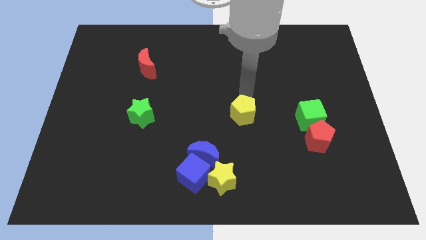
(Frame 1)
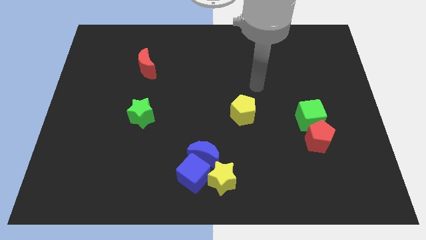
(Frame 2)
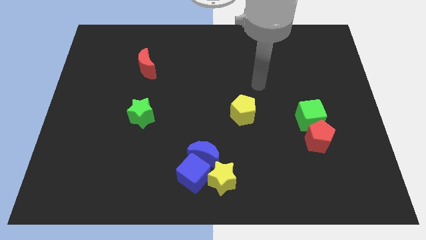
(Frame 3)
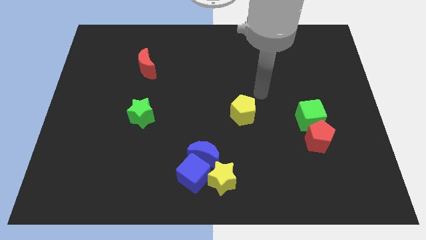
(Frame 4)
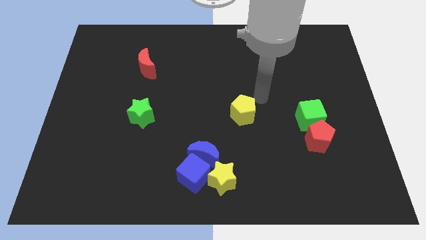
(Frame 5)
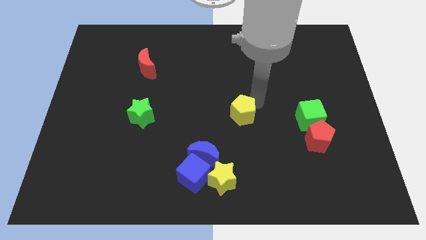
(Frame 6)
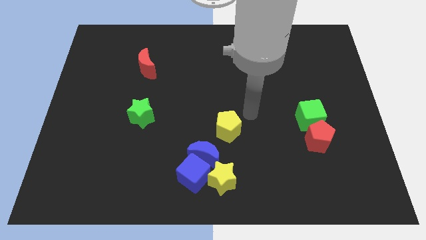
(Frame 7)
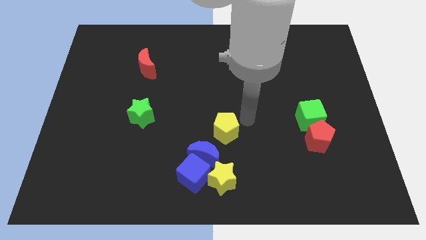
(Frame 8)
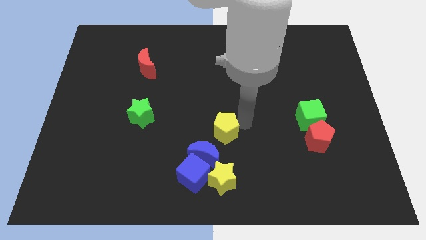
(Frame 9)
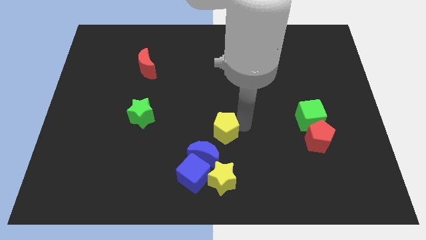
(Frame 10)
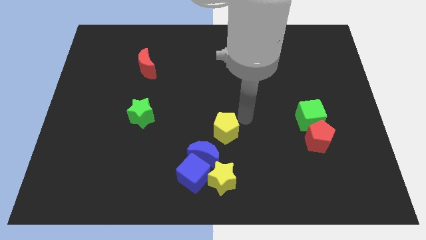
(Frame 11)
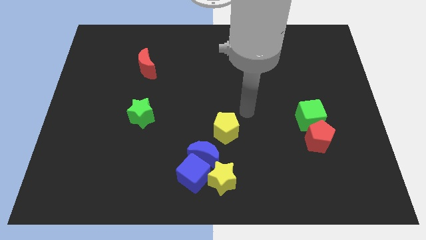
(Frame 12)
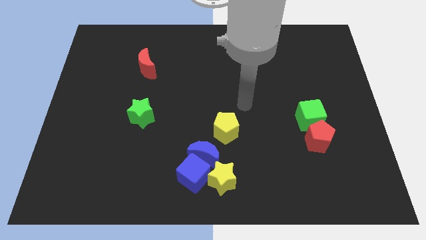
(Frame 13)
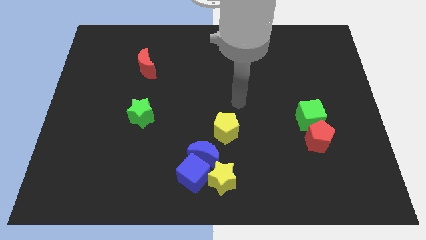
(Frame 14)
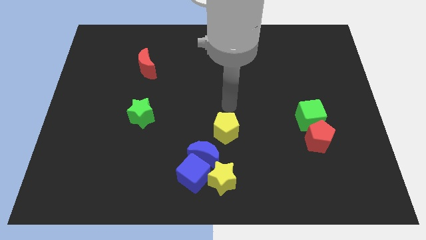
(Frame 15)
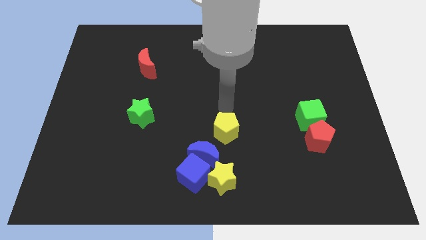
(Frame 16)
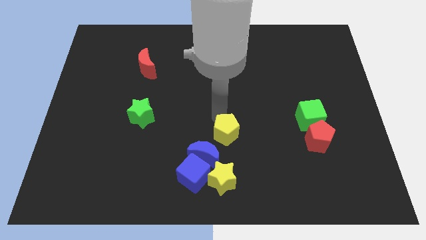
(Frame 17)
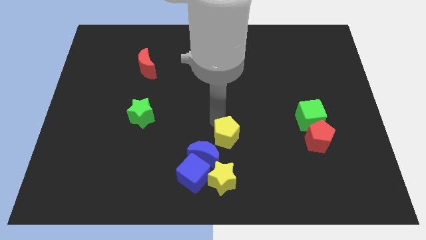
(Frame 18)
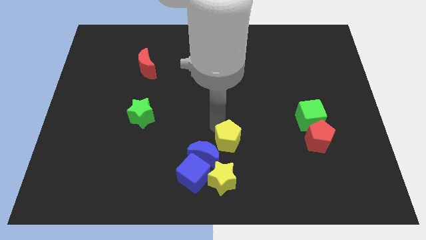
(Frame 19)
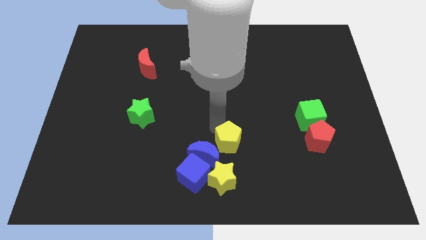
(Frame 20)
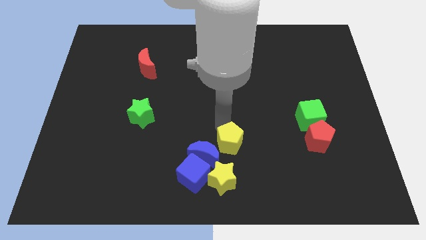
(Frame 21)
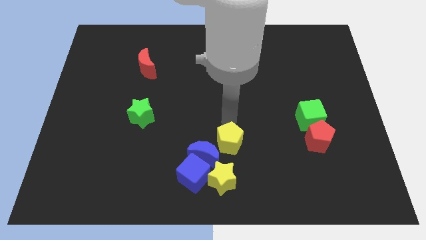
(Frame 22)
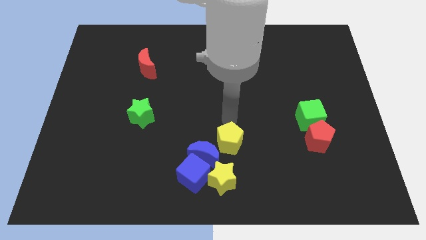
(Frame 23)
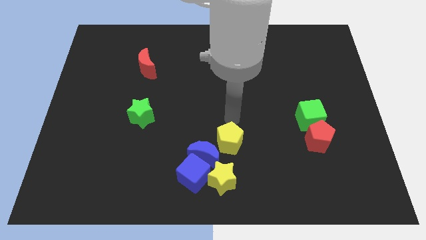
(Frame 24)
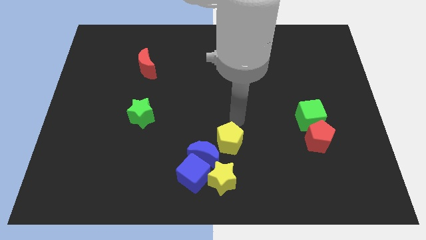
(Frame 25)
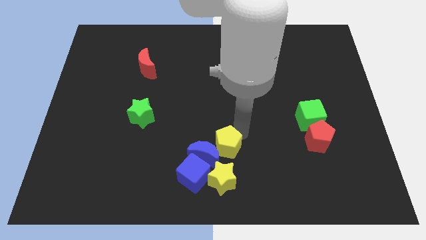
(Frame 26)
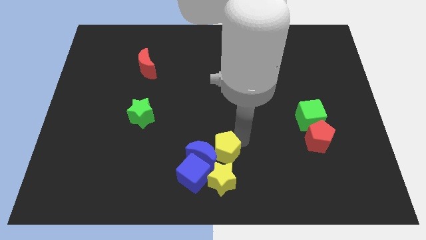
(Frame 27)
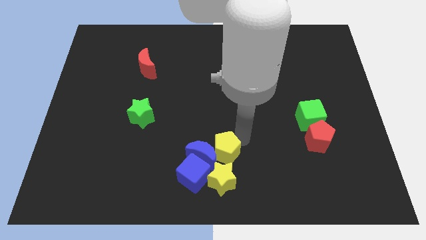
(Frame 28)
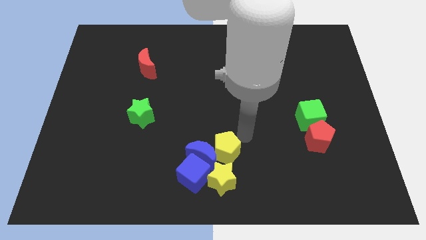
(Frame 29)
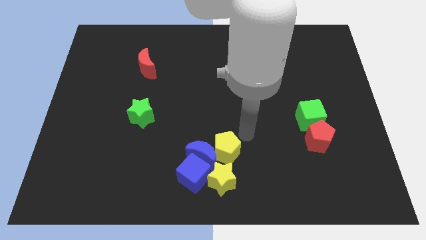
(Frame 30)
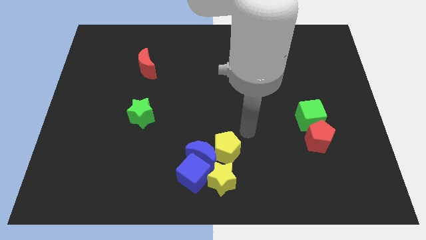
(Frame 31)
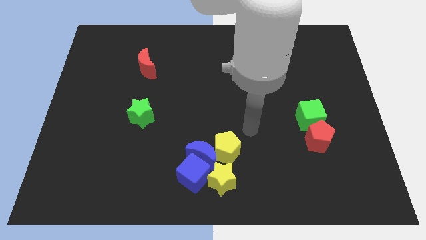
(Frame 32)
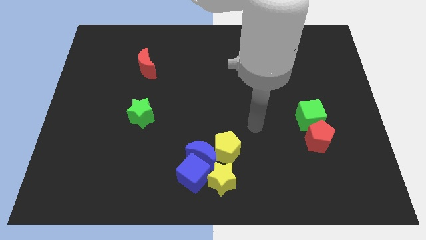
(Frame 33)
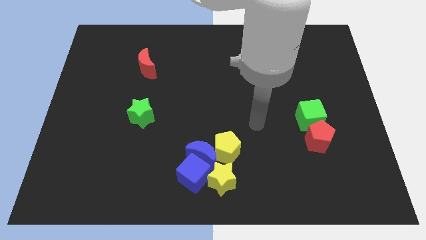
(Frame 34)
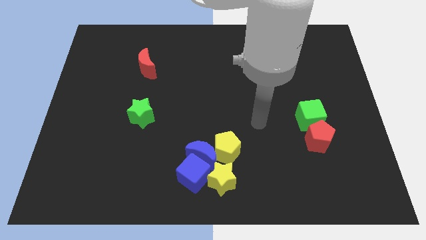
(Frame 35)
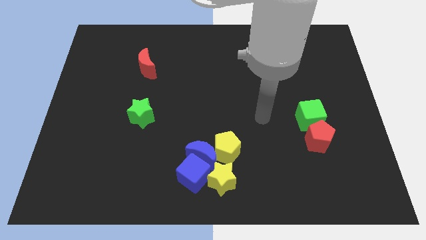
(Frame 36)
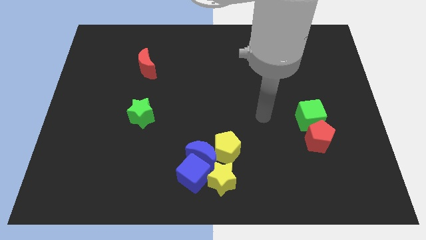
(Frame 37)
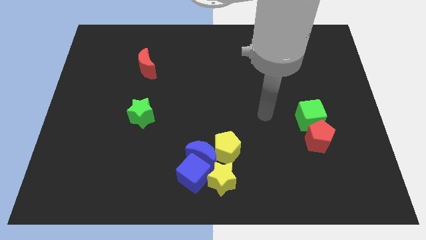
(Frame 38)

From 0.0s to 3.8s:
place the yellow pentagon above the yellow star

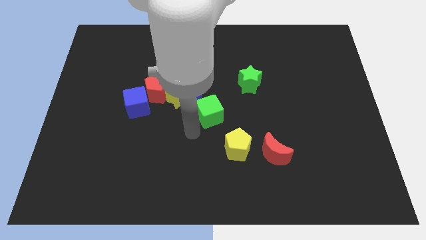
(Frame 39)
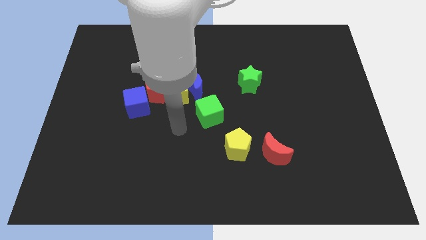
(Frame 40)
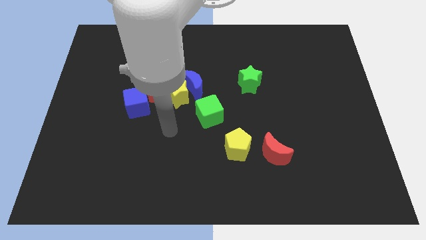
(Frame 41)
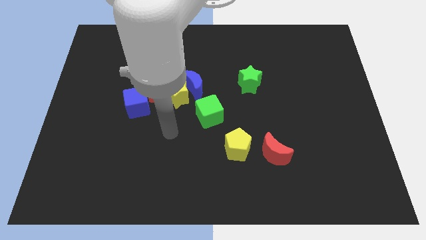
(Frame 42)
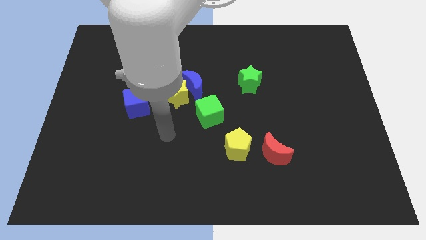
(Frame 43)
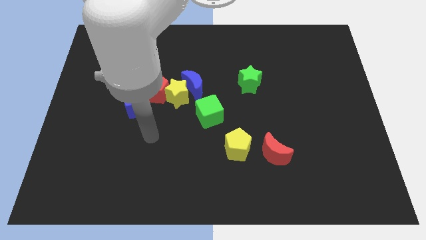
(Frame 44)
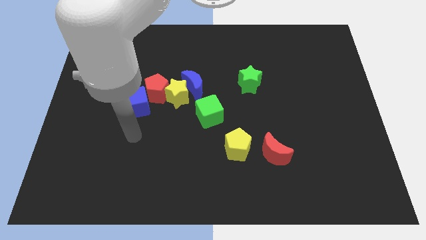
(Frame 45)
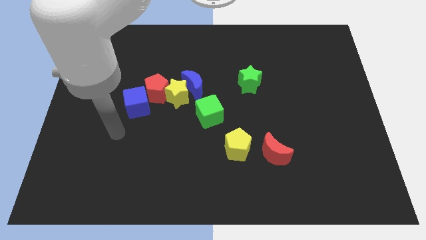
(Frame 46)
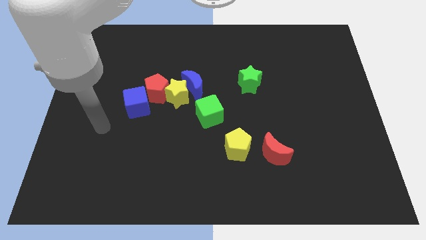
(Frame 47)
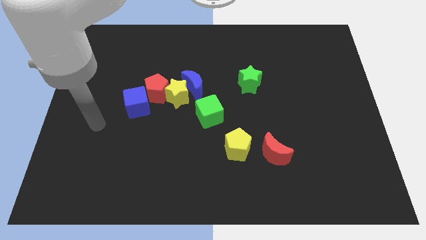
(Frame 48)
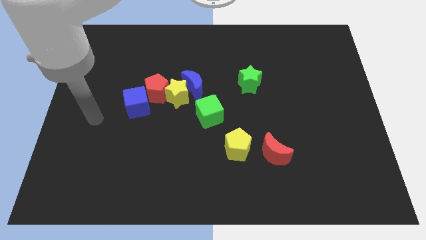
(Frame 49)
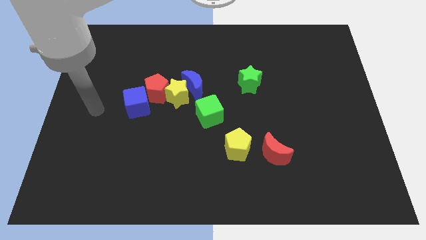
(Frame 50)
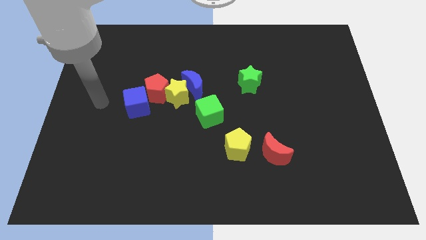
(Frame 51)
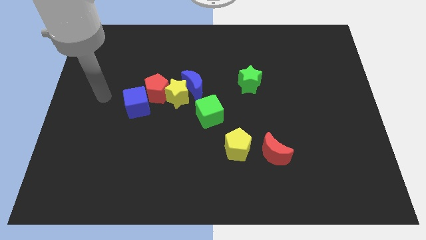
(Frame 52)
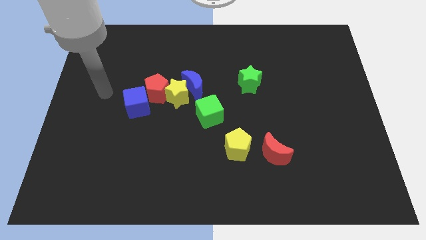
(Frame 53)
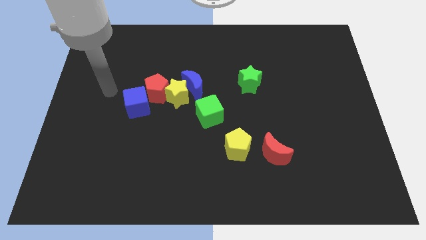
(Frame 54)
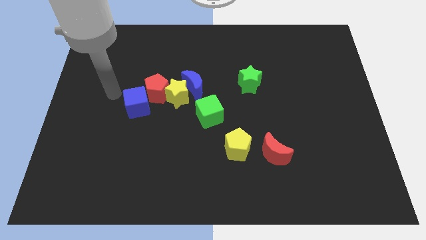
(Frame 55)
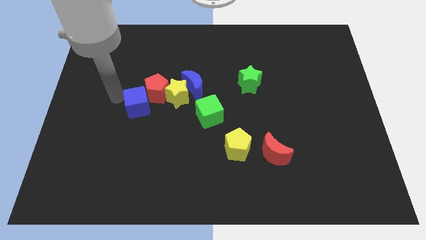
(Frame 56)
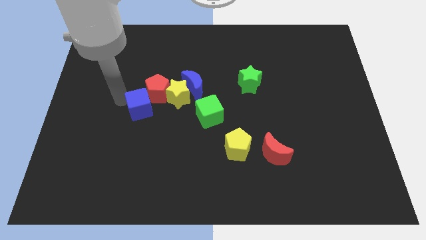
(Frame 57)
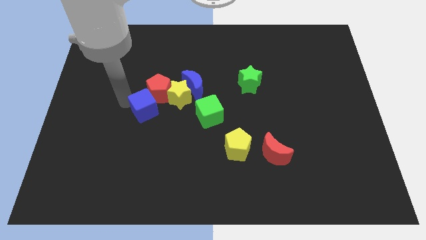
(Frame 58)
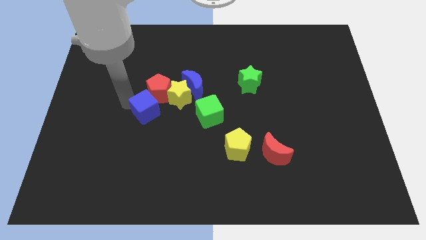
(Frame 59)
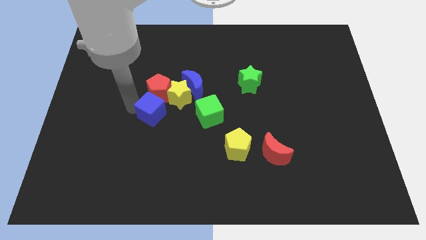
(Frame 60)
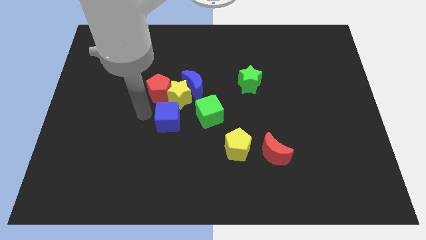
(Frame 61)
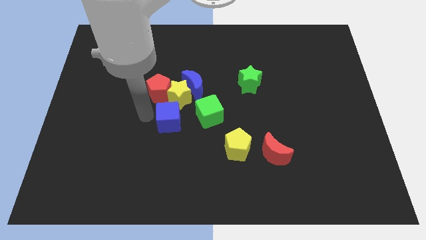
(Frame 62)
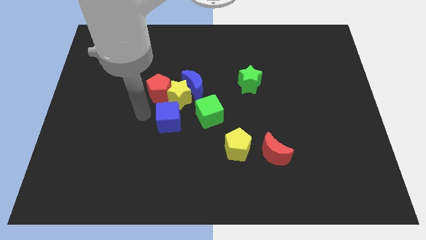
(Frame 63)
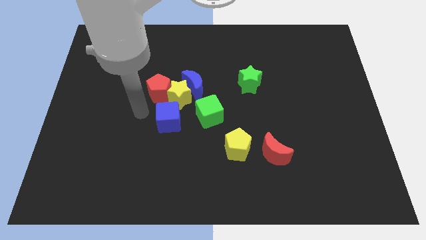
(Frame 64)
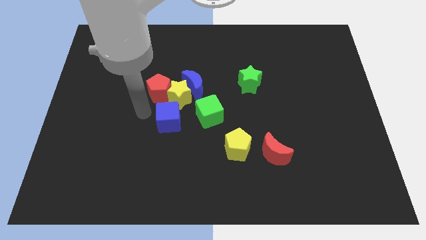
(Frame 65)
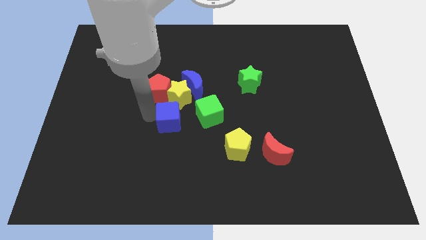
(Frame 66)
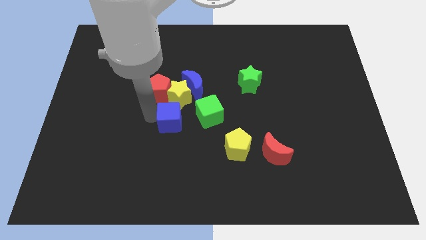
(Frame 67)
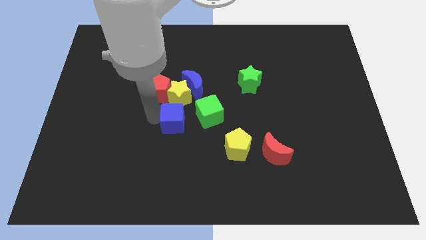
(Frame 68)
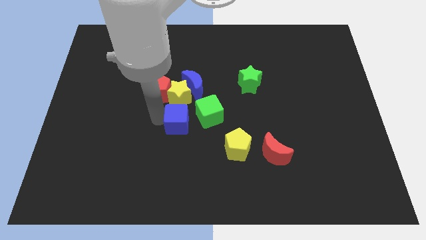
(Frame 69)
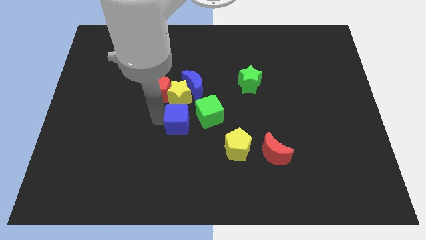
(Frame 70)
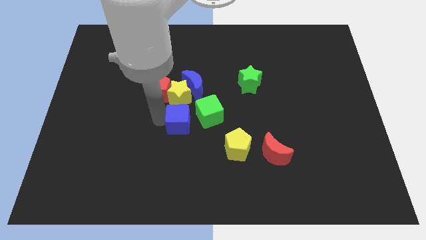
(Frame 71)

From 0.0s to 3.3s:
place the blue cube down to the yellow star

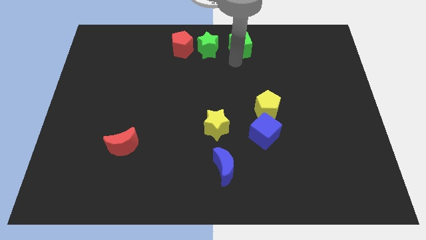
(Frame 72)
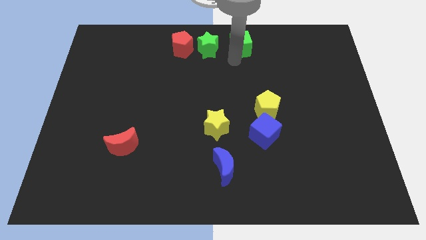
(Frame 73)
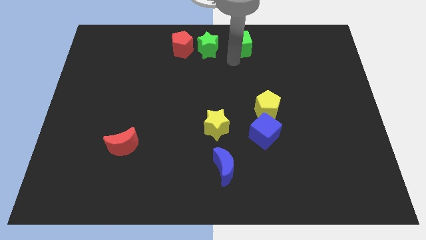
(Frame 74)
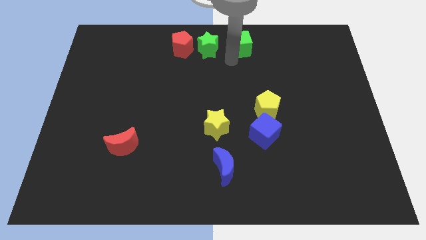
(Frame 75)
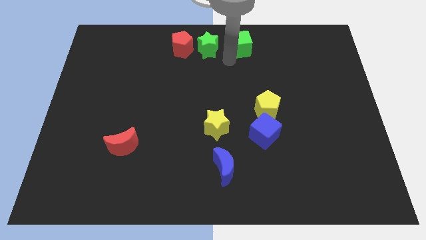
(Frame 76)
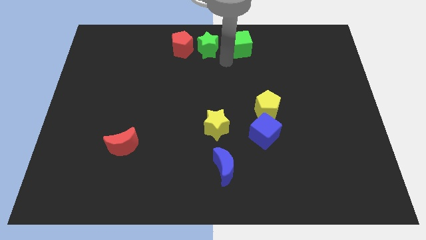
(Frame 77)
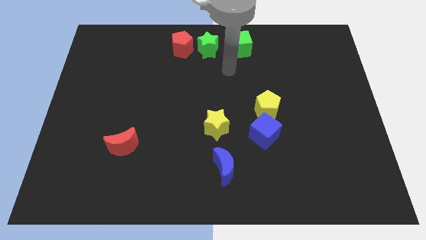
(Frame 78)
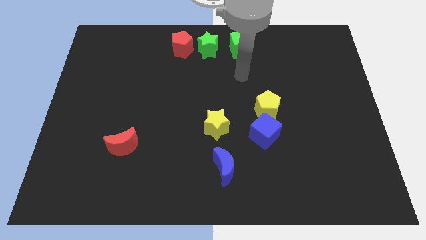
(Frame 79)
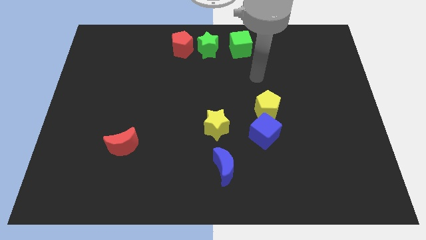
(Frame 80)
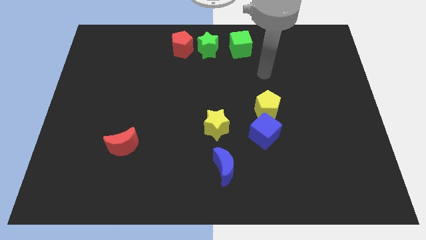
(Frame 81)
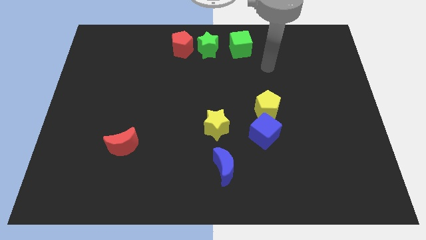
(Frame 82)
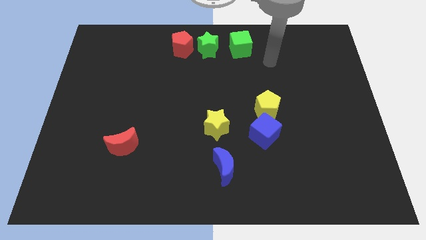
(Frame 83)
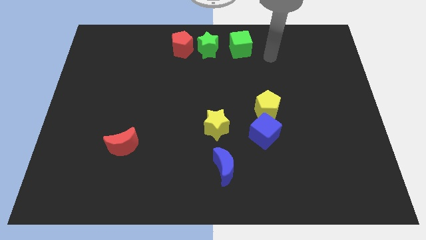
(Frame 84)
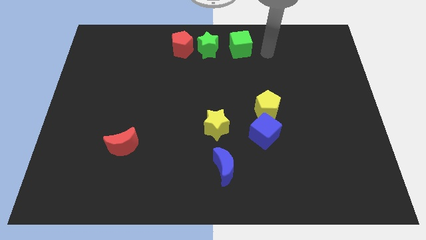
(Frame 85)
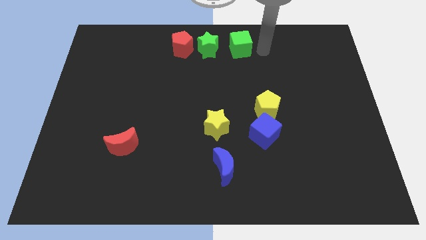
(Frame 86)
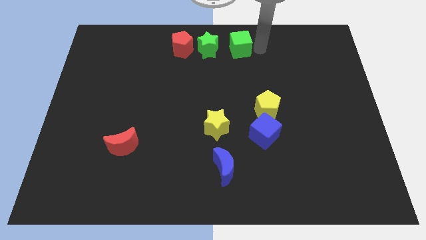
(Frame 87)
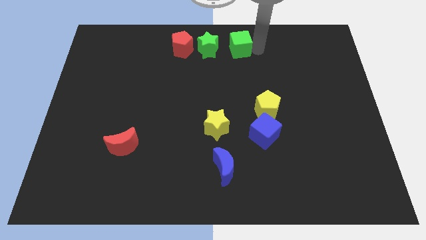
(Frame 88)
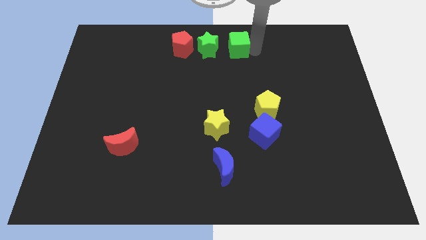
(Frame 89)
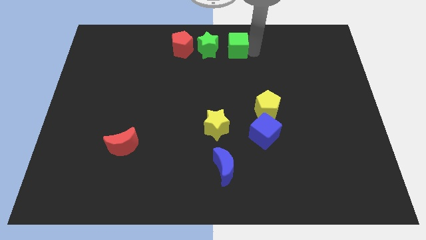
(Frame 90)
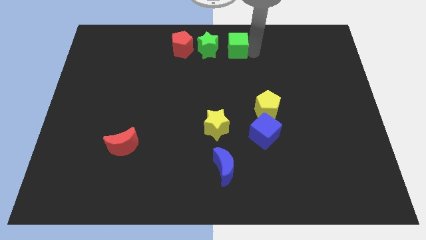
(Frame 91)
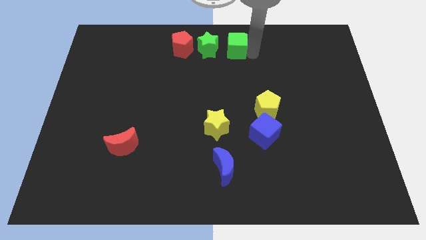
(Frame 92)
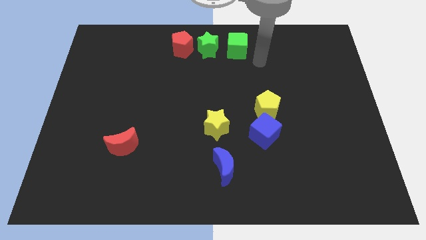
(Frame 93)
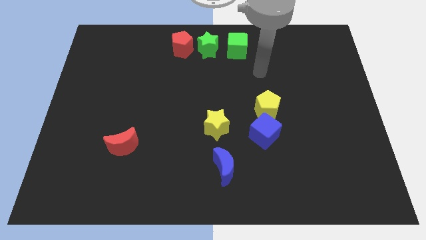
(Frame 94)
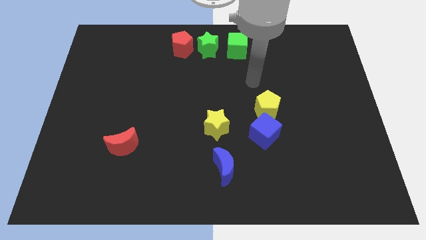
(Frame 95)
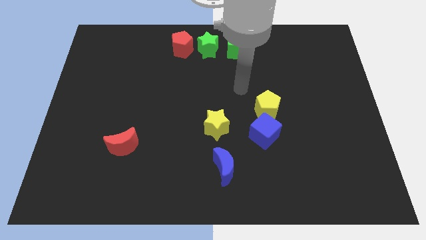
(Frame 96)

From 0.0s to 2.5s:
move the green cube slightly towards the green star
